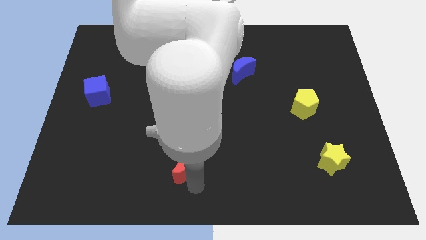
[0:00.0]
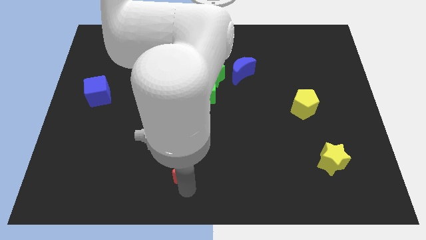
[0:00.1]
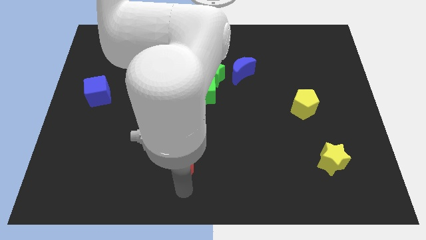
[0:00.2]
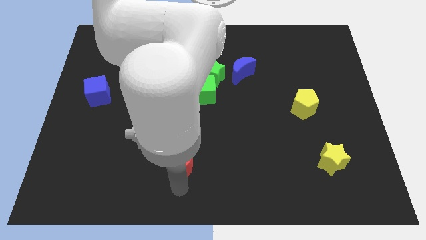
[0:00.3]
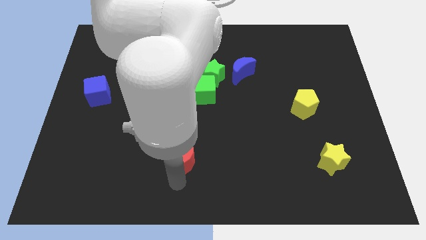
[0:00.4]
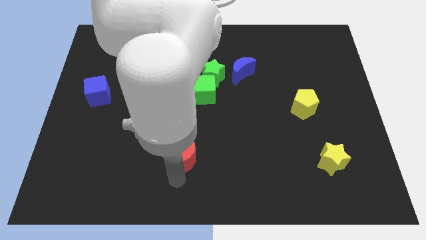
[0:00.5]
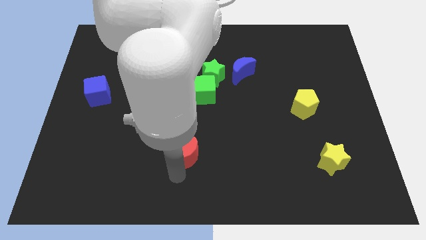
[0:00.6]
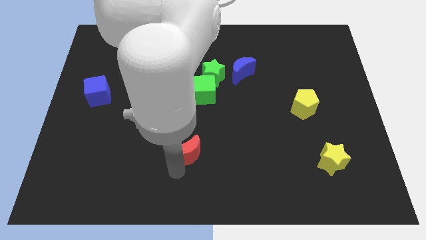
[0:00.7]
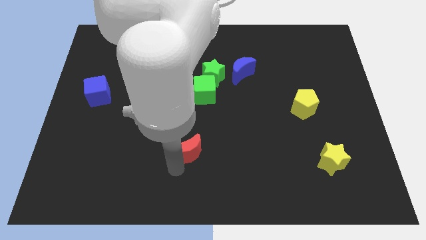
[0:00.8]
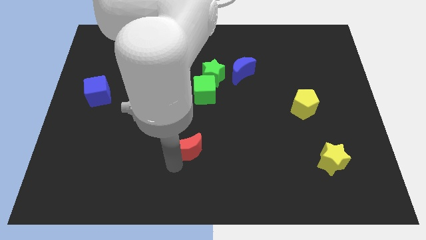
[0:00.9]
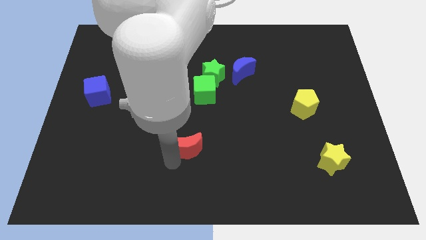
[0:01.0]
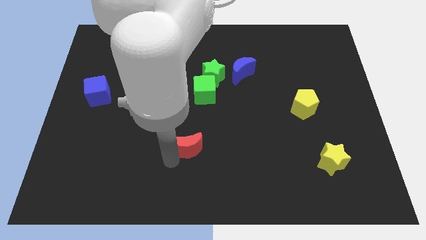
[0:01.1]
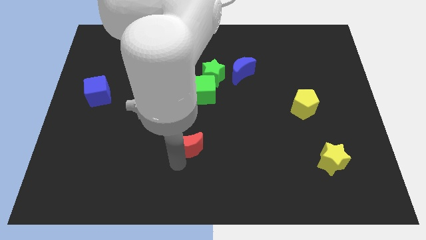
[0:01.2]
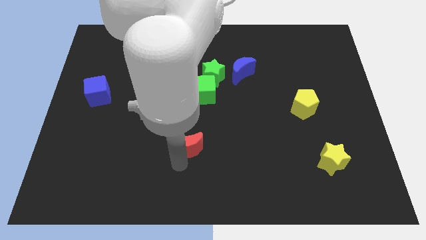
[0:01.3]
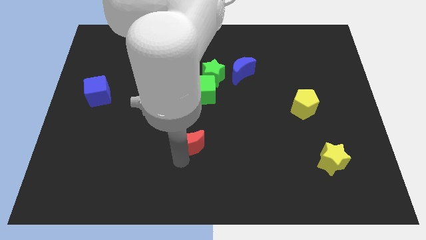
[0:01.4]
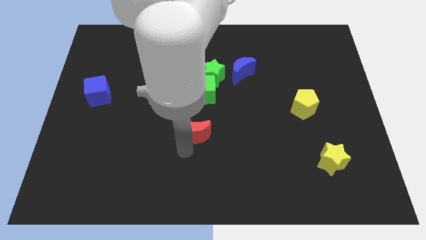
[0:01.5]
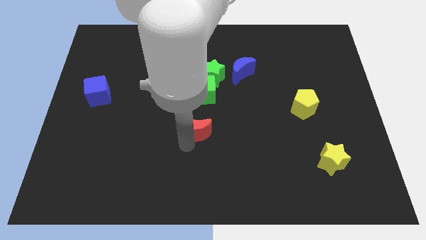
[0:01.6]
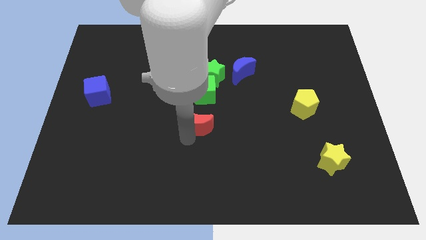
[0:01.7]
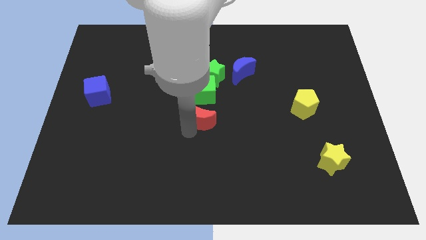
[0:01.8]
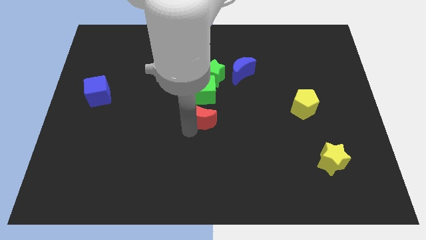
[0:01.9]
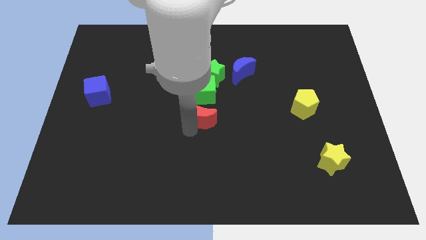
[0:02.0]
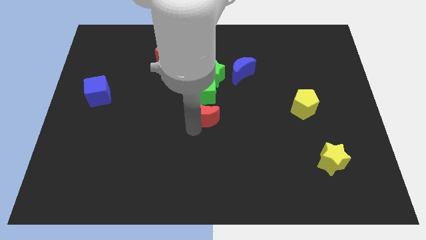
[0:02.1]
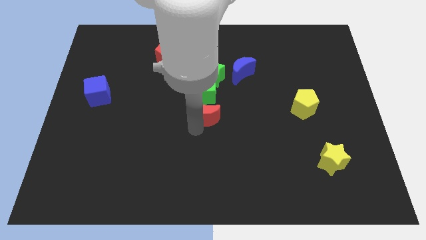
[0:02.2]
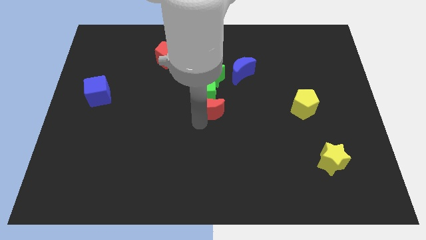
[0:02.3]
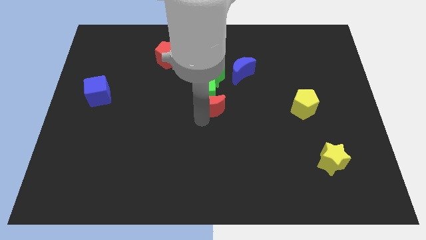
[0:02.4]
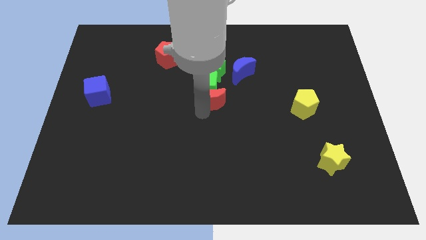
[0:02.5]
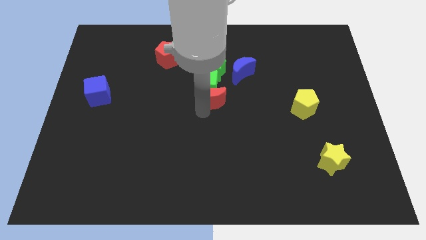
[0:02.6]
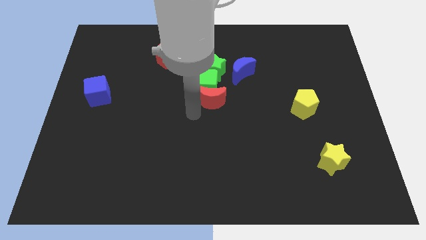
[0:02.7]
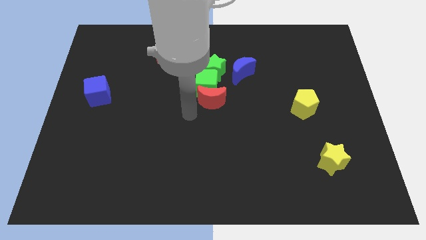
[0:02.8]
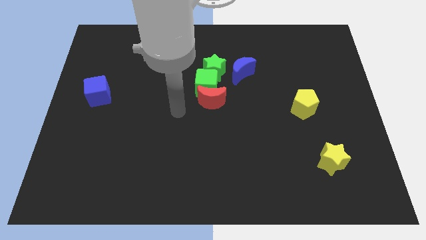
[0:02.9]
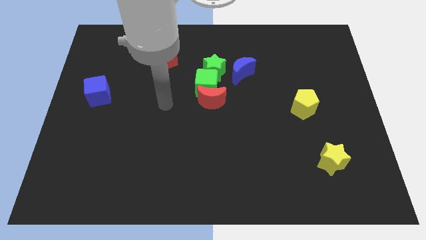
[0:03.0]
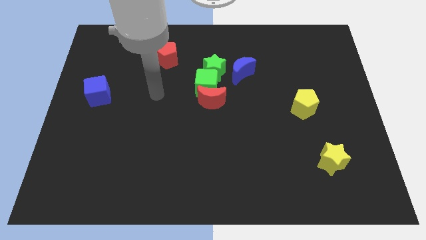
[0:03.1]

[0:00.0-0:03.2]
place the red moon to the bottom of the green cube

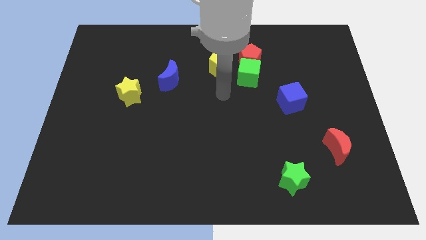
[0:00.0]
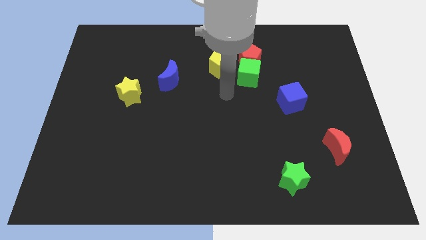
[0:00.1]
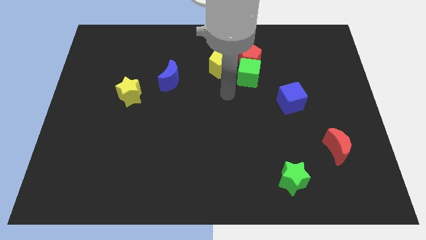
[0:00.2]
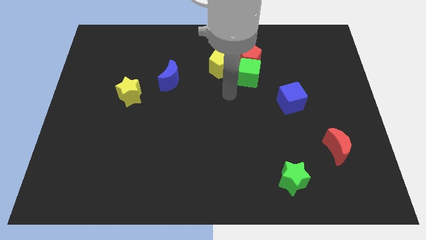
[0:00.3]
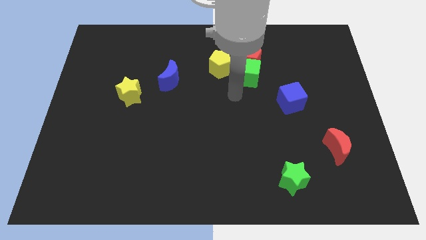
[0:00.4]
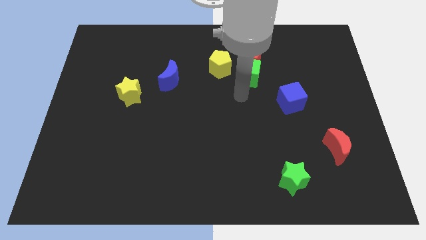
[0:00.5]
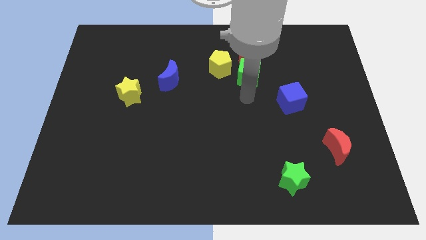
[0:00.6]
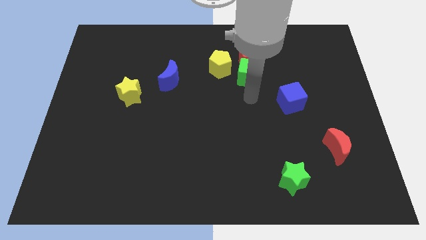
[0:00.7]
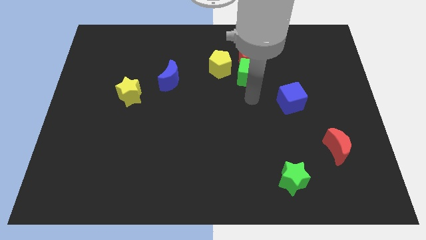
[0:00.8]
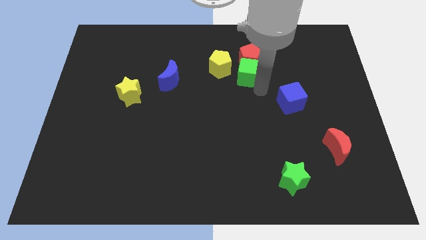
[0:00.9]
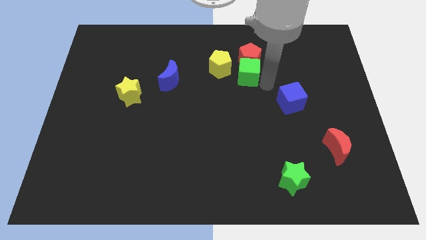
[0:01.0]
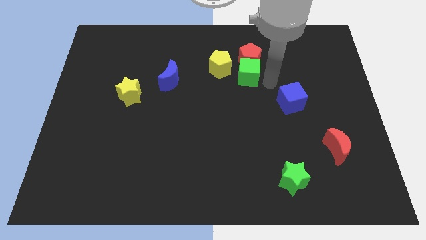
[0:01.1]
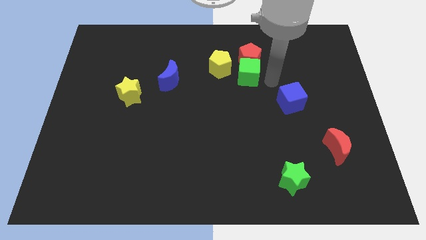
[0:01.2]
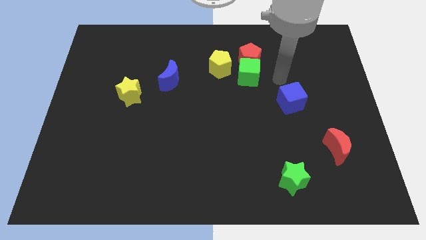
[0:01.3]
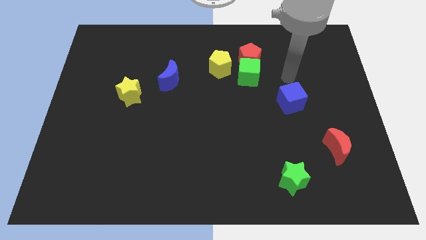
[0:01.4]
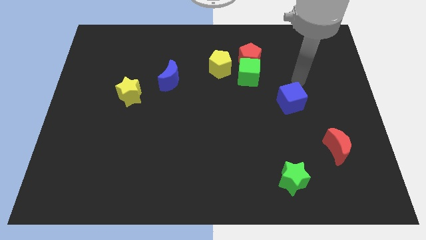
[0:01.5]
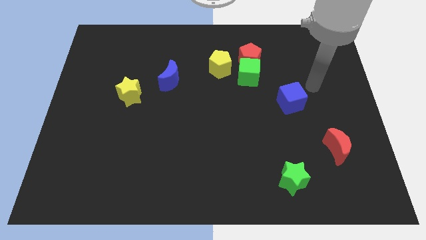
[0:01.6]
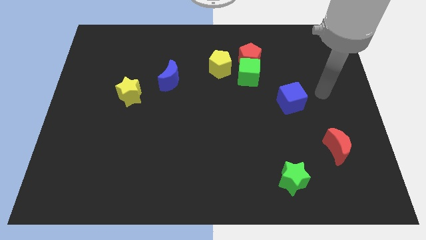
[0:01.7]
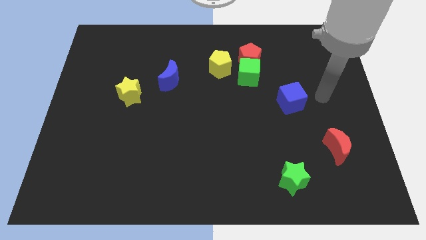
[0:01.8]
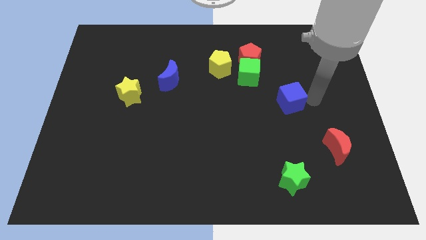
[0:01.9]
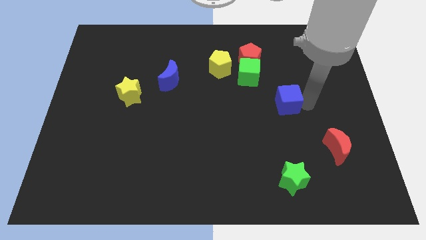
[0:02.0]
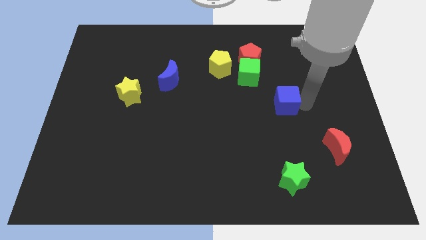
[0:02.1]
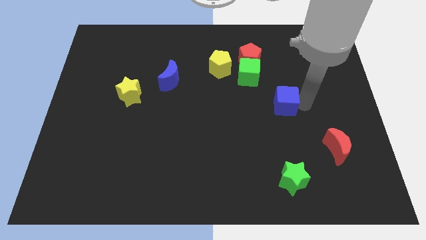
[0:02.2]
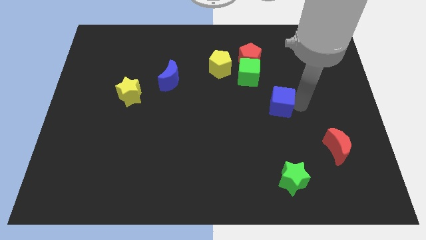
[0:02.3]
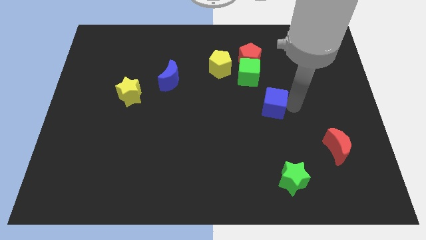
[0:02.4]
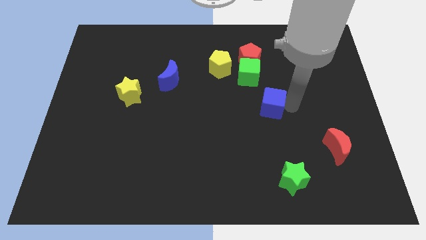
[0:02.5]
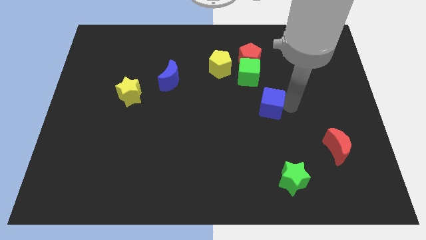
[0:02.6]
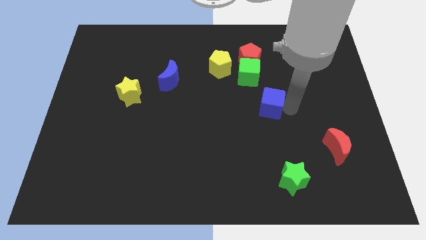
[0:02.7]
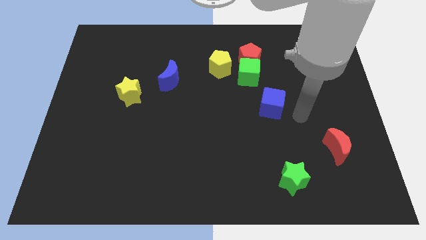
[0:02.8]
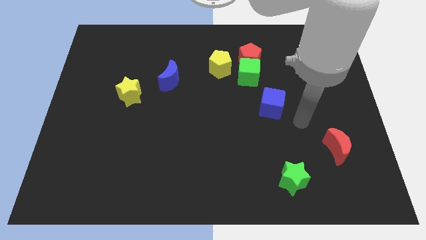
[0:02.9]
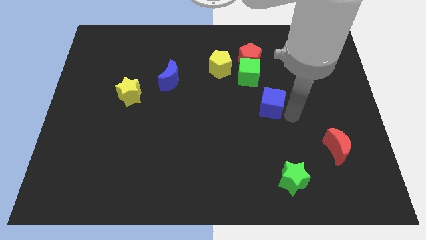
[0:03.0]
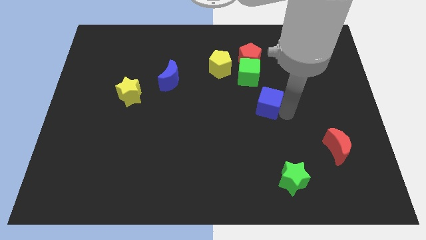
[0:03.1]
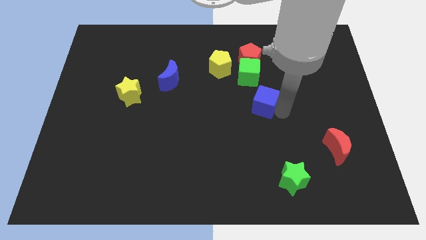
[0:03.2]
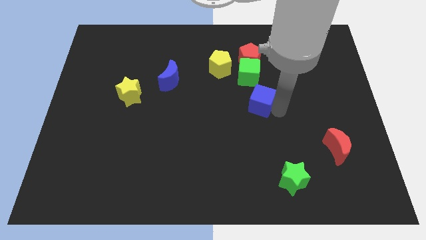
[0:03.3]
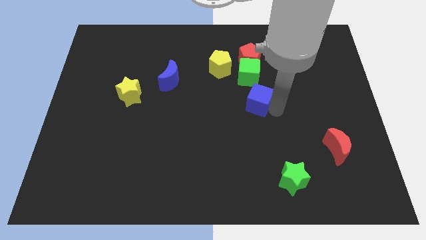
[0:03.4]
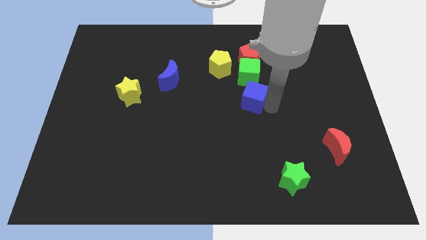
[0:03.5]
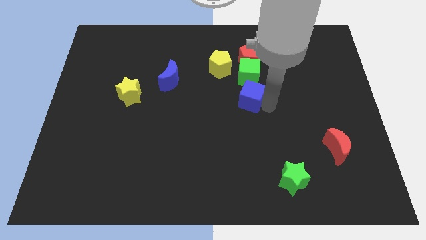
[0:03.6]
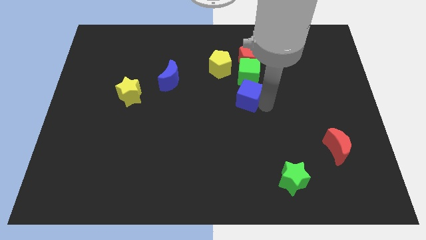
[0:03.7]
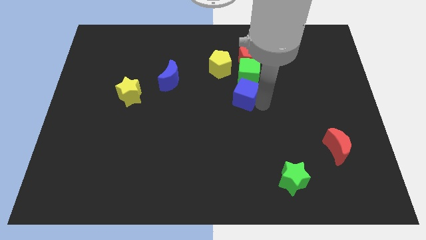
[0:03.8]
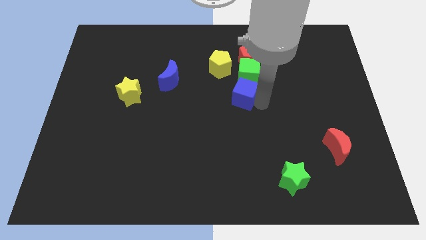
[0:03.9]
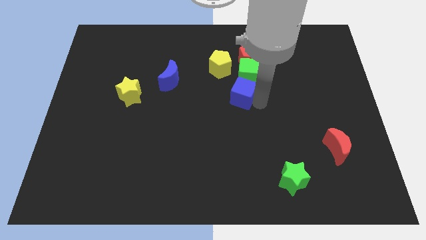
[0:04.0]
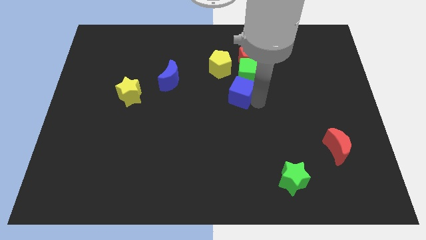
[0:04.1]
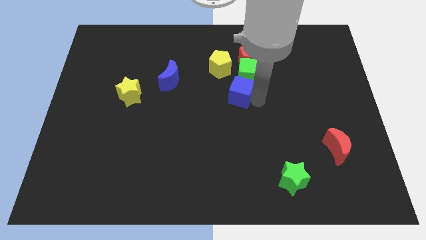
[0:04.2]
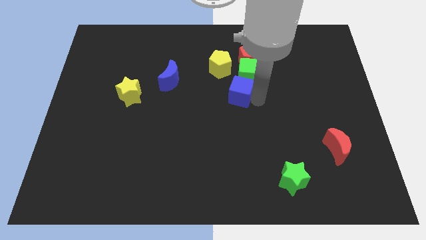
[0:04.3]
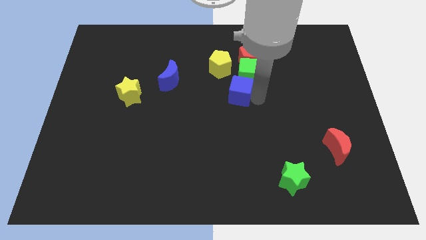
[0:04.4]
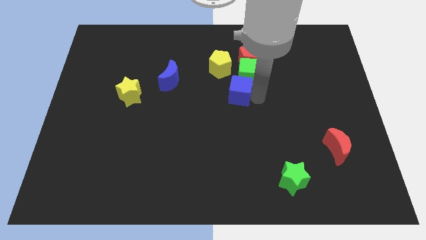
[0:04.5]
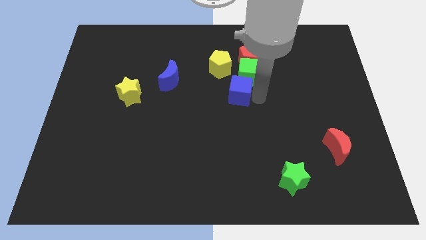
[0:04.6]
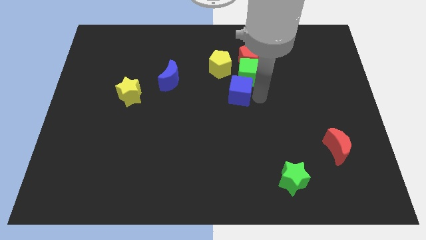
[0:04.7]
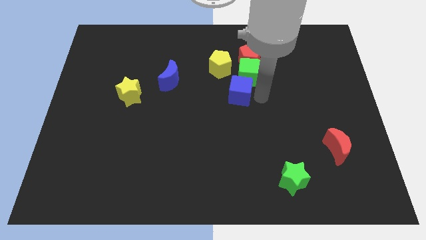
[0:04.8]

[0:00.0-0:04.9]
push the blue cube to the horizontal right of blue moon

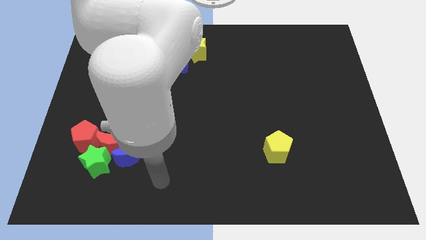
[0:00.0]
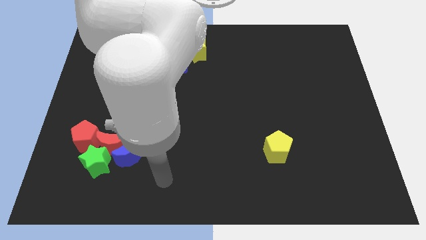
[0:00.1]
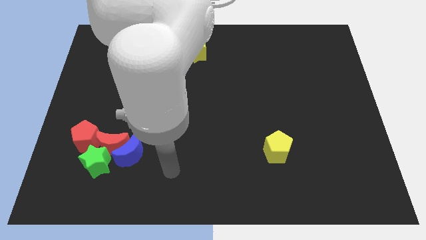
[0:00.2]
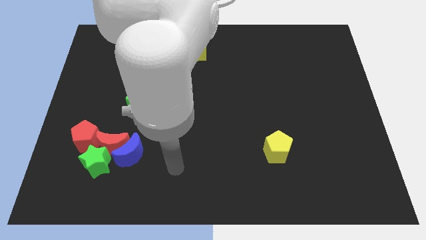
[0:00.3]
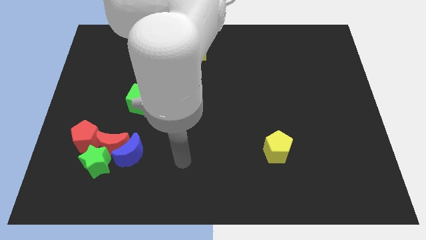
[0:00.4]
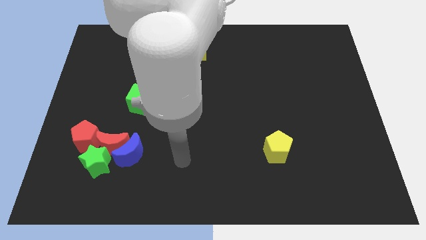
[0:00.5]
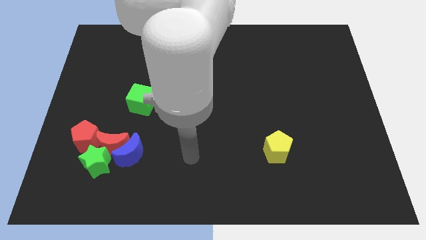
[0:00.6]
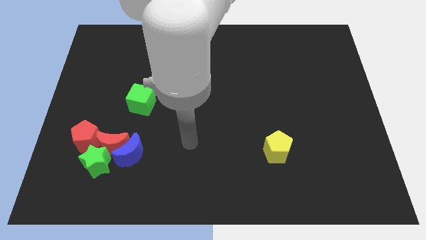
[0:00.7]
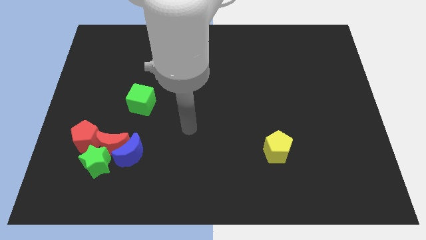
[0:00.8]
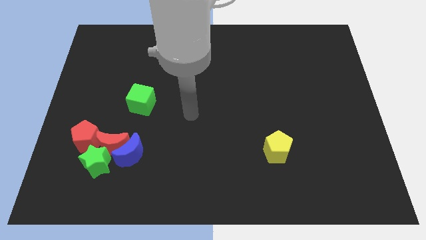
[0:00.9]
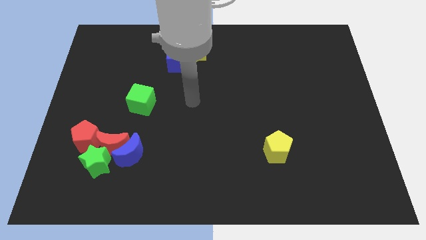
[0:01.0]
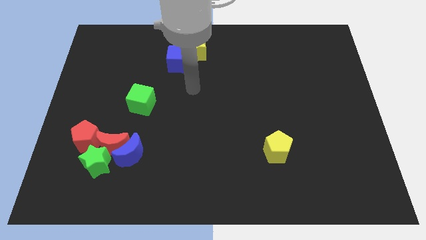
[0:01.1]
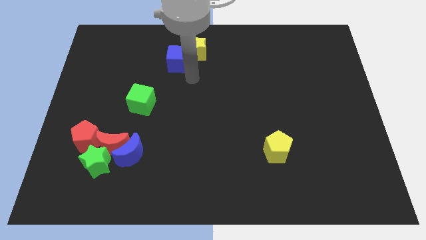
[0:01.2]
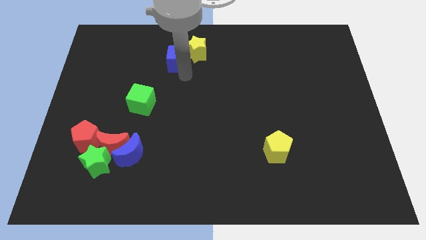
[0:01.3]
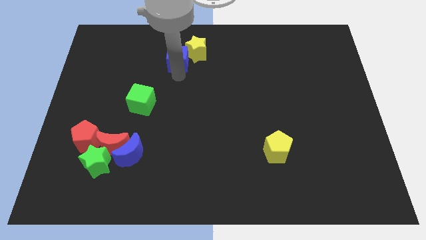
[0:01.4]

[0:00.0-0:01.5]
point your arm below the blue cube
